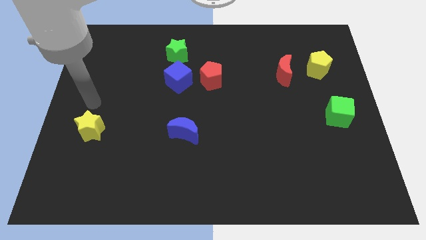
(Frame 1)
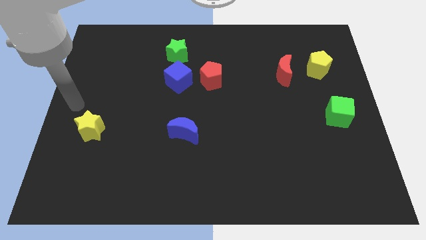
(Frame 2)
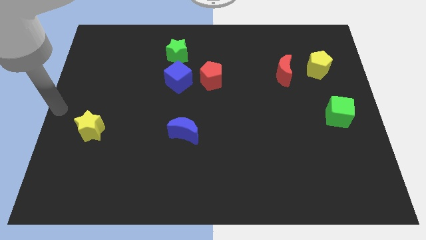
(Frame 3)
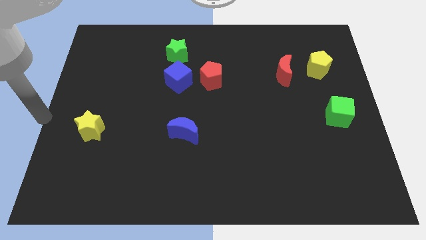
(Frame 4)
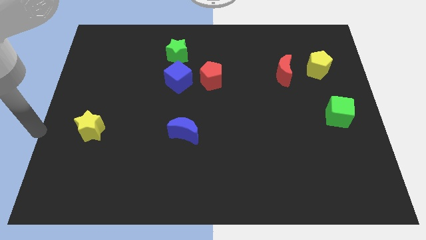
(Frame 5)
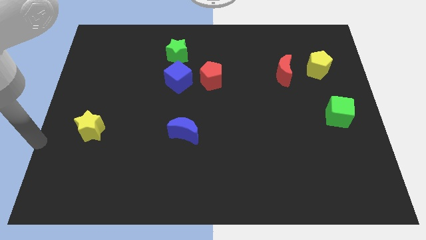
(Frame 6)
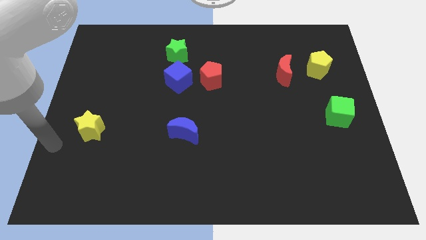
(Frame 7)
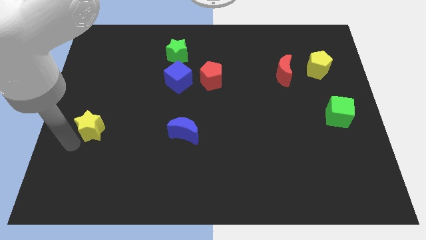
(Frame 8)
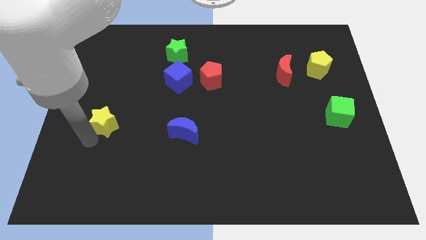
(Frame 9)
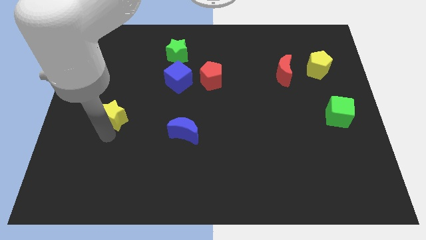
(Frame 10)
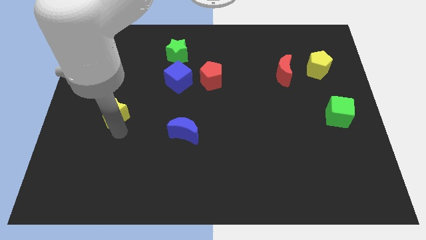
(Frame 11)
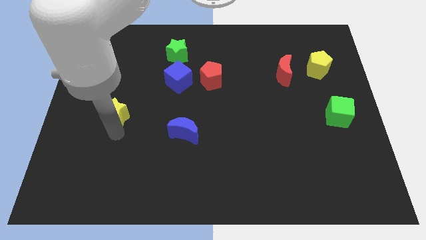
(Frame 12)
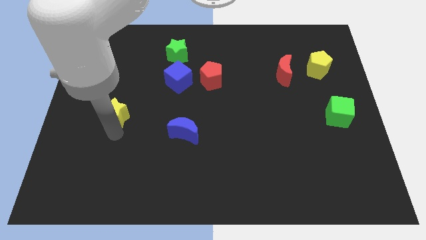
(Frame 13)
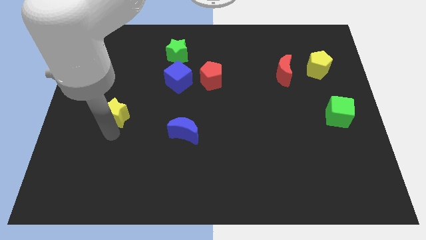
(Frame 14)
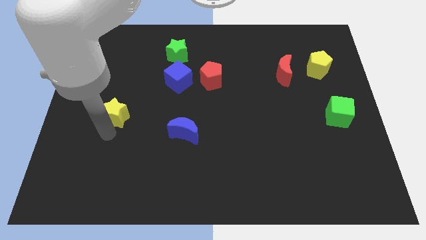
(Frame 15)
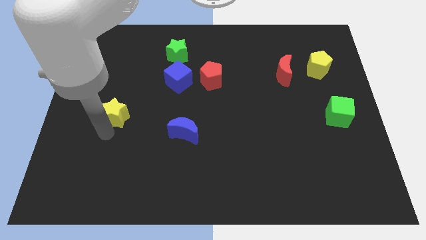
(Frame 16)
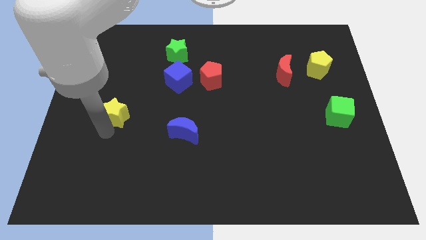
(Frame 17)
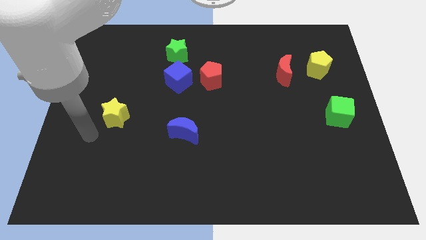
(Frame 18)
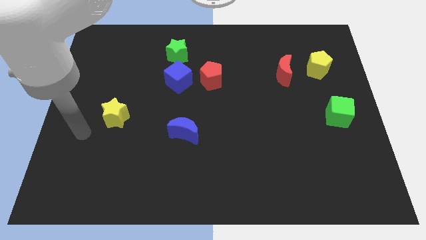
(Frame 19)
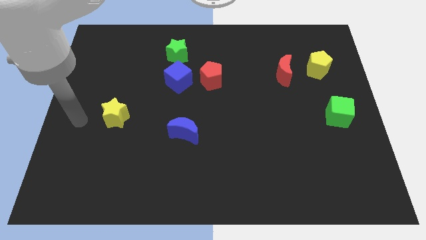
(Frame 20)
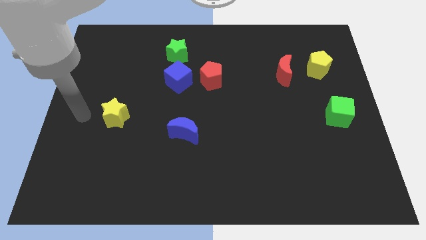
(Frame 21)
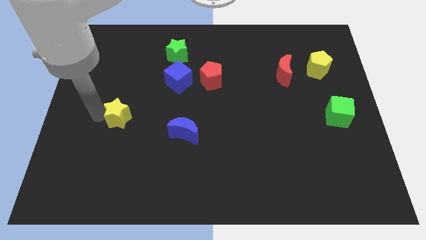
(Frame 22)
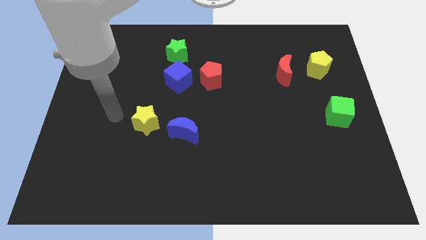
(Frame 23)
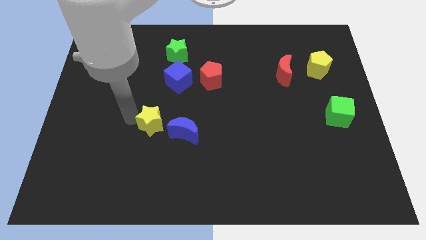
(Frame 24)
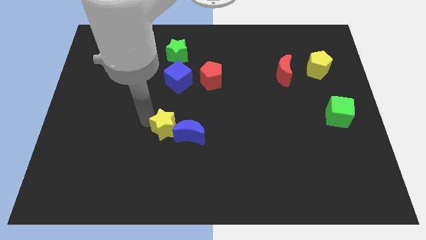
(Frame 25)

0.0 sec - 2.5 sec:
push the yellow star into the blue moon

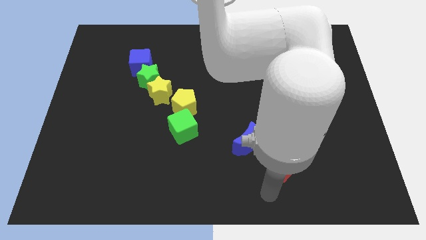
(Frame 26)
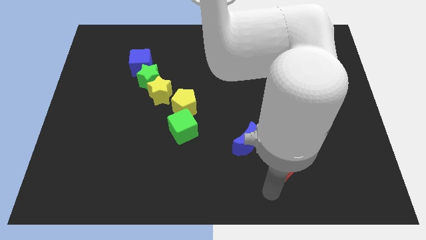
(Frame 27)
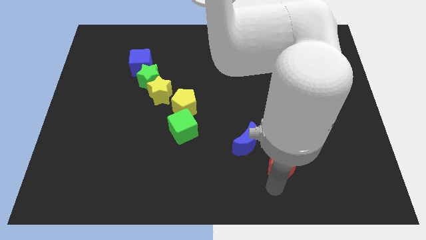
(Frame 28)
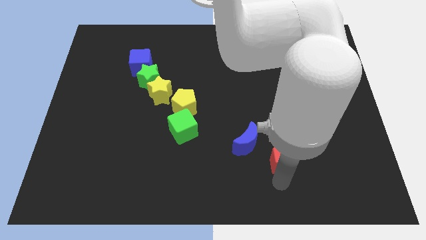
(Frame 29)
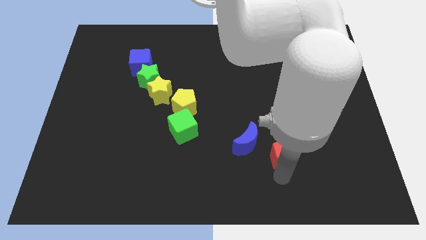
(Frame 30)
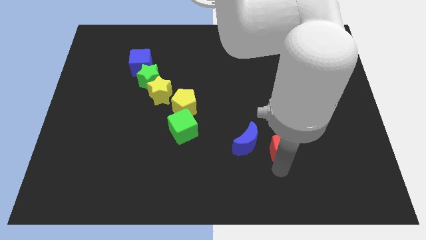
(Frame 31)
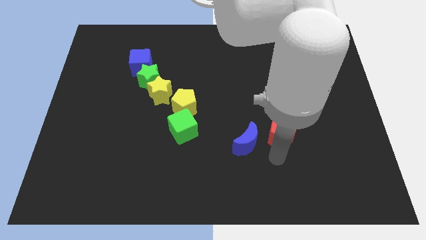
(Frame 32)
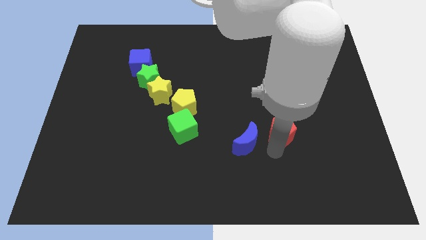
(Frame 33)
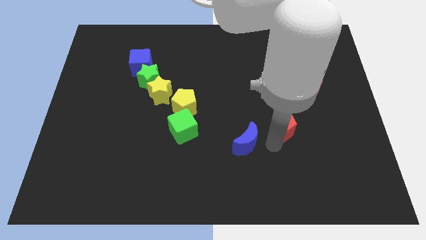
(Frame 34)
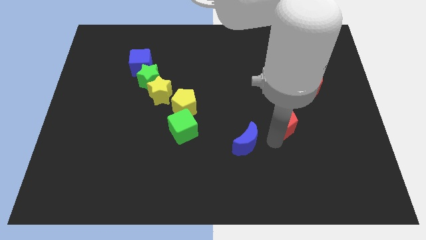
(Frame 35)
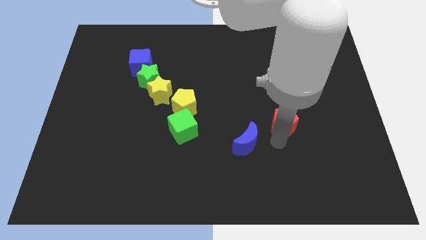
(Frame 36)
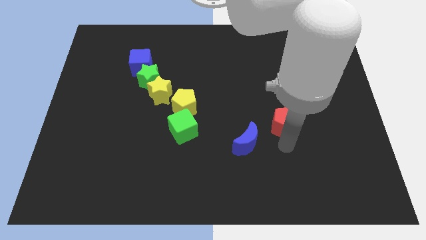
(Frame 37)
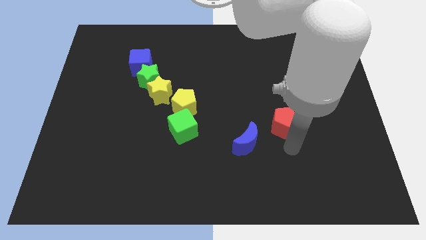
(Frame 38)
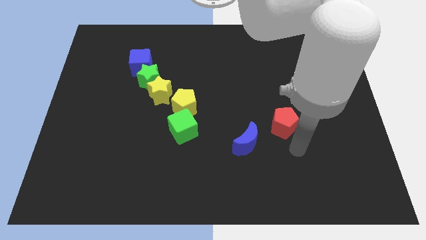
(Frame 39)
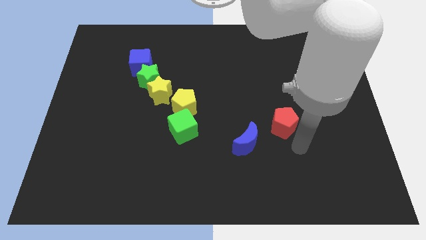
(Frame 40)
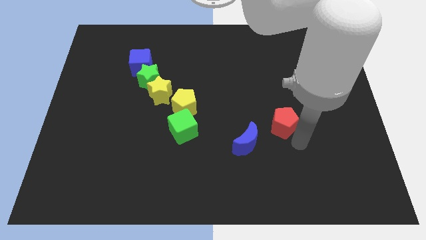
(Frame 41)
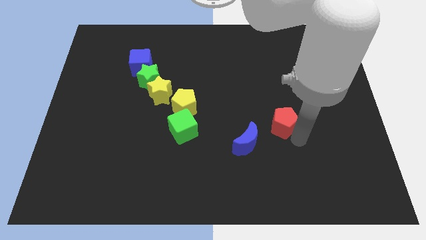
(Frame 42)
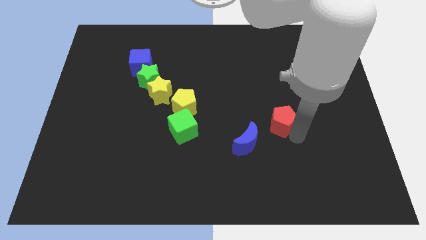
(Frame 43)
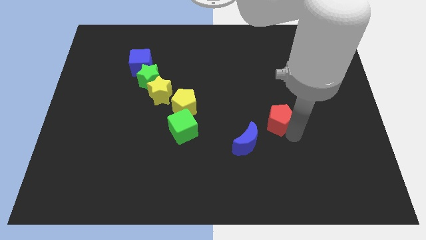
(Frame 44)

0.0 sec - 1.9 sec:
move the red pentagon between red and blue moon

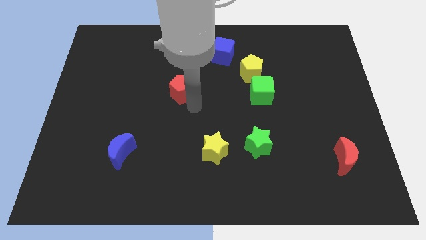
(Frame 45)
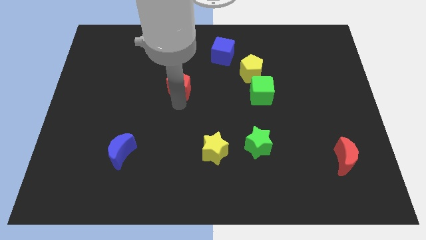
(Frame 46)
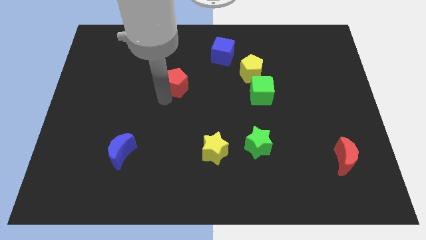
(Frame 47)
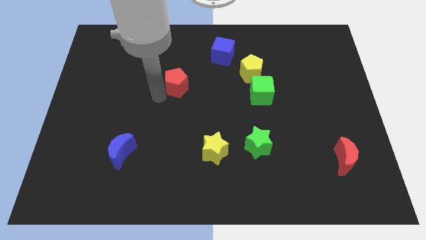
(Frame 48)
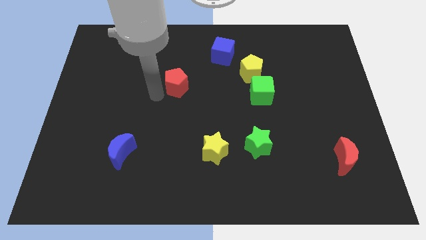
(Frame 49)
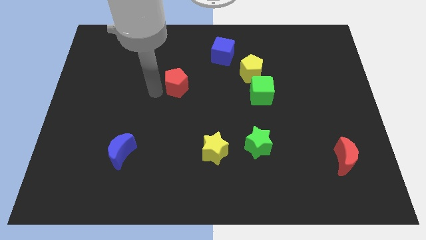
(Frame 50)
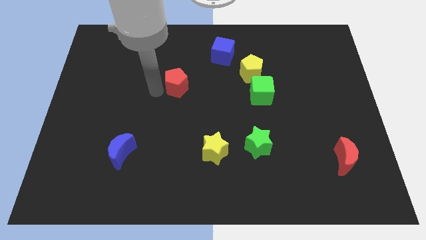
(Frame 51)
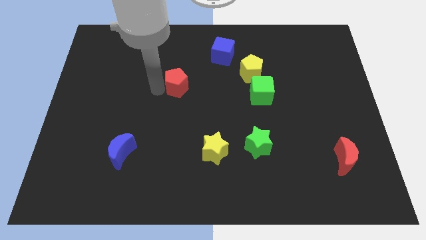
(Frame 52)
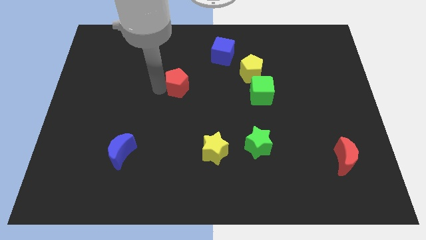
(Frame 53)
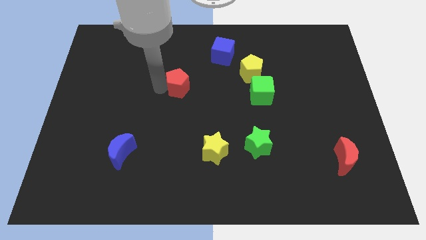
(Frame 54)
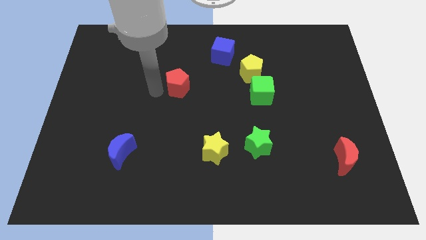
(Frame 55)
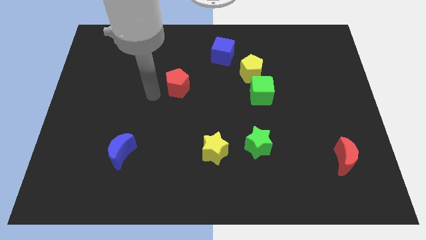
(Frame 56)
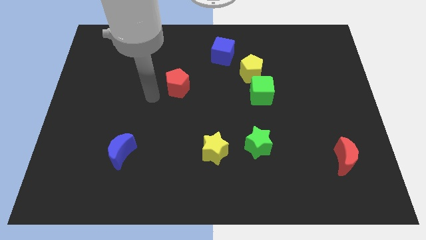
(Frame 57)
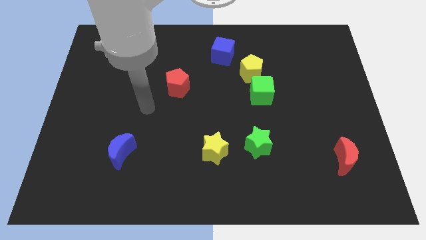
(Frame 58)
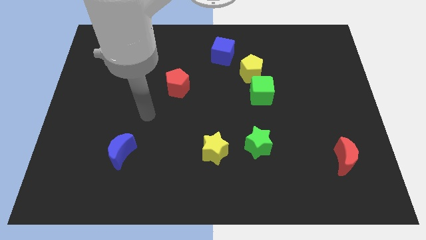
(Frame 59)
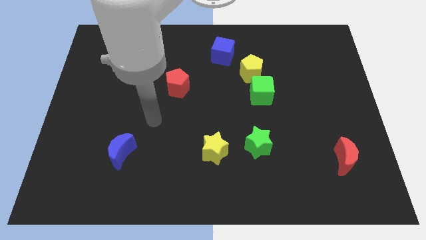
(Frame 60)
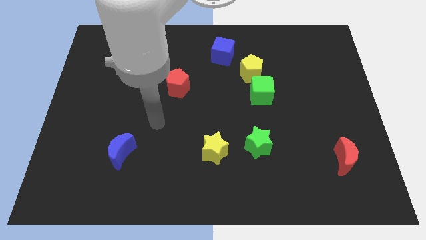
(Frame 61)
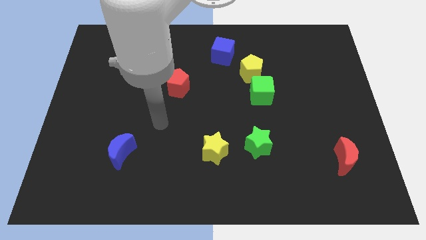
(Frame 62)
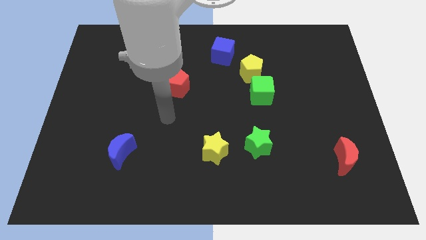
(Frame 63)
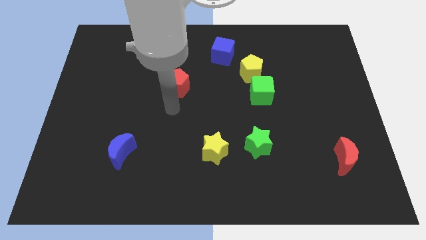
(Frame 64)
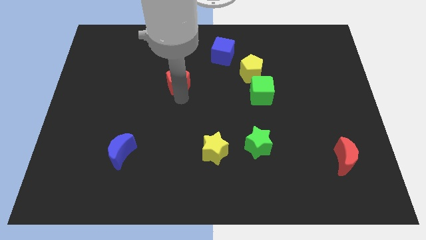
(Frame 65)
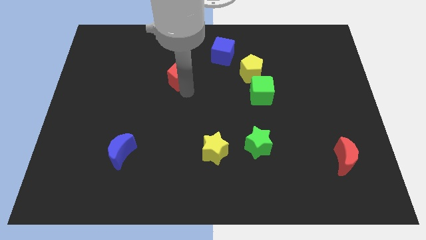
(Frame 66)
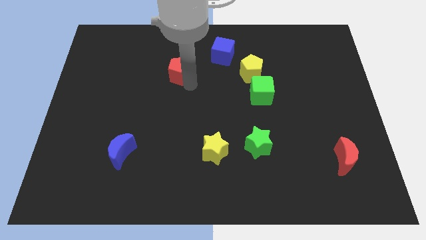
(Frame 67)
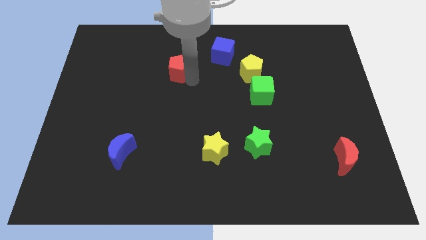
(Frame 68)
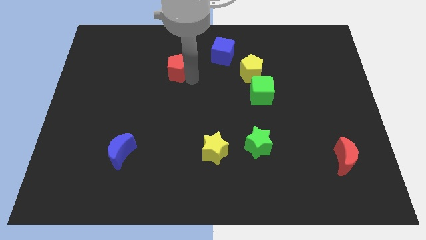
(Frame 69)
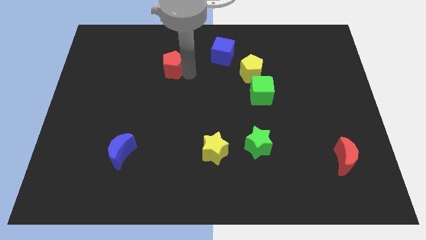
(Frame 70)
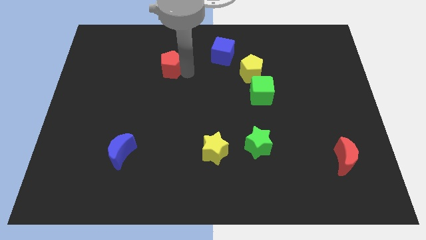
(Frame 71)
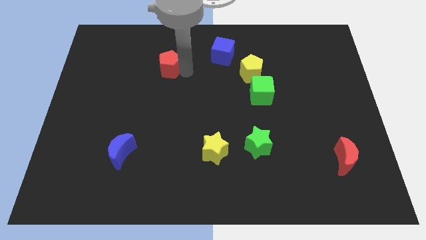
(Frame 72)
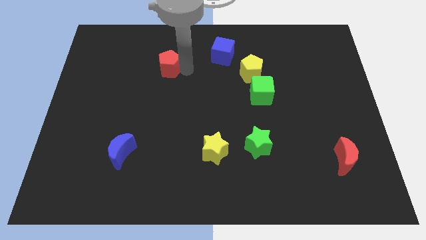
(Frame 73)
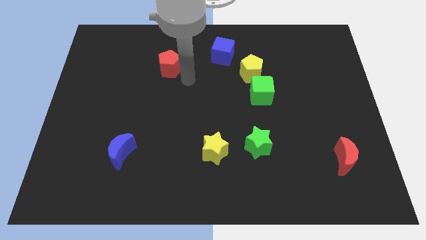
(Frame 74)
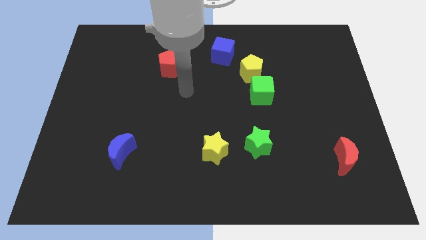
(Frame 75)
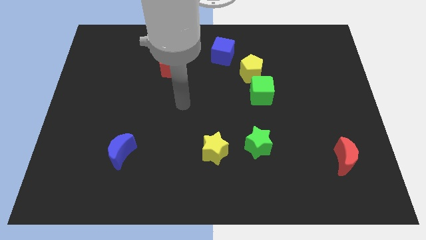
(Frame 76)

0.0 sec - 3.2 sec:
slightly push the red pentagon towards top side

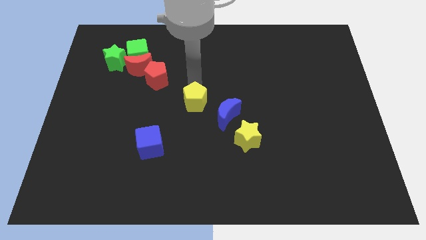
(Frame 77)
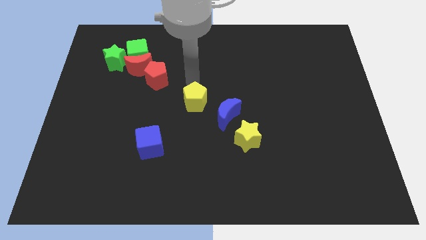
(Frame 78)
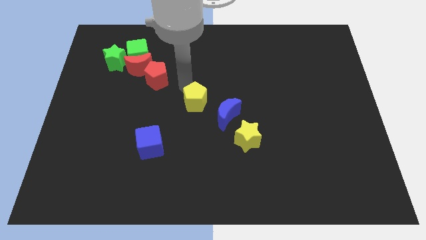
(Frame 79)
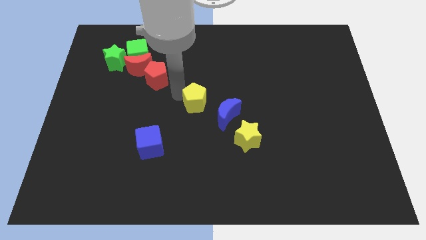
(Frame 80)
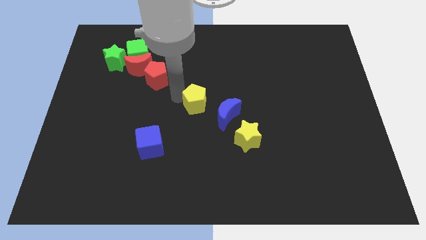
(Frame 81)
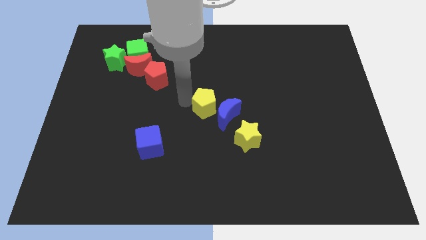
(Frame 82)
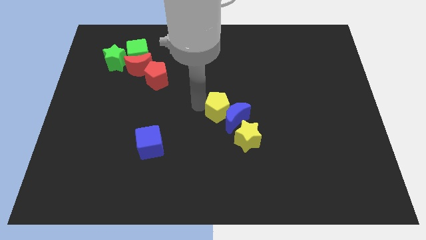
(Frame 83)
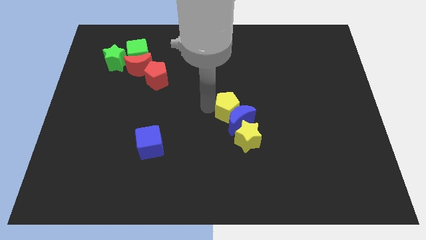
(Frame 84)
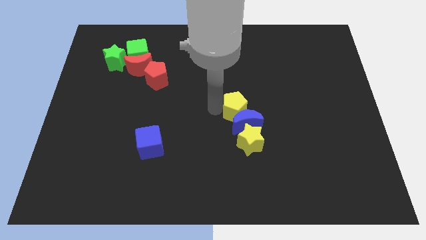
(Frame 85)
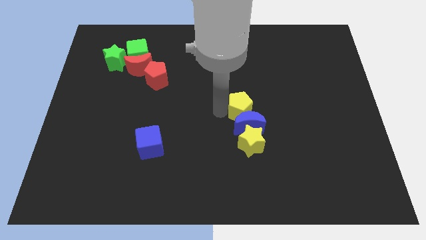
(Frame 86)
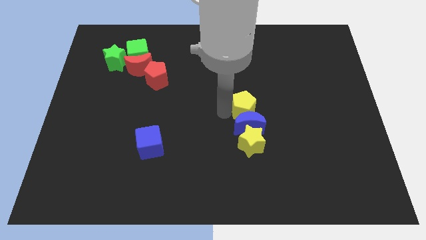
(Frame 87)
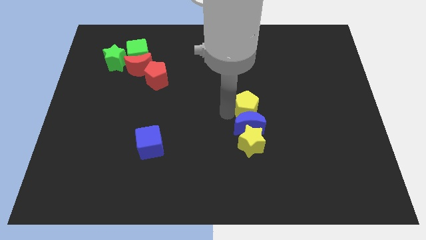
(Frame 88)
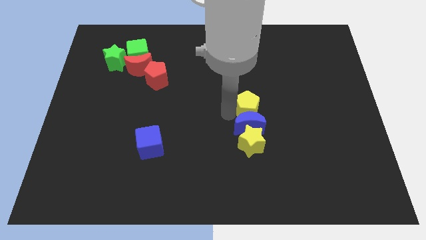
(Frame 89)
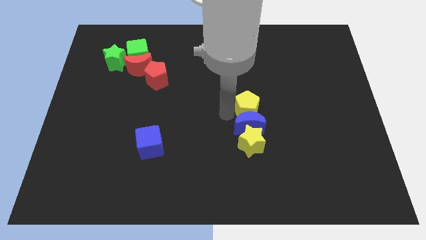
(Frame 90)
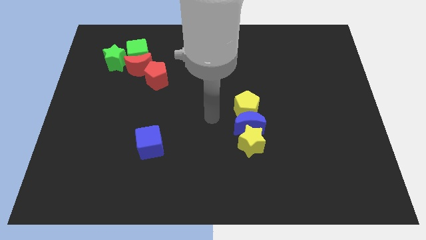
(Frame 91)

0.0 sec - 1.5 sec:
move the yellow pentagon into the blue moon
